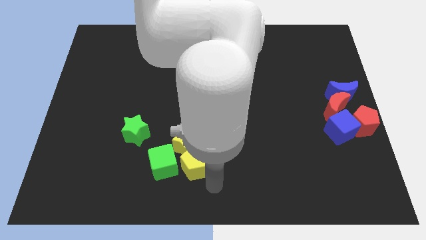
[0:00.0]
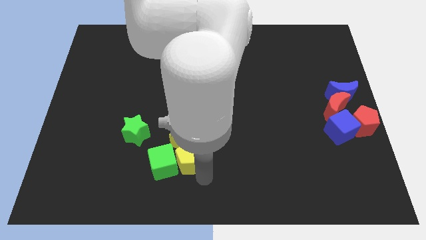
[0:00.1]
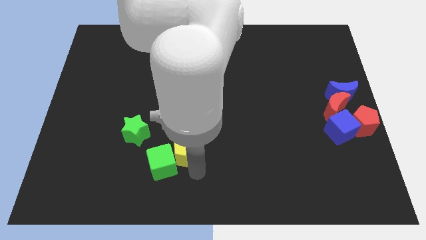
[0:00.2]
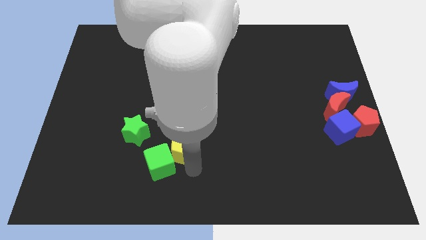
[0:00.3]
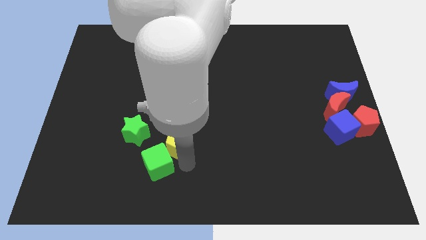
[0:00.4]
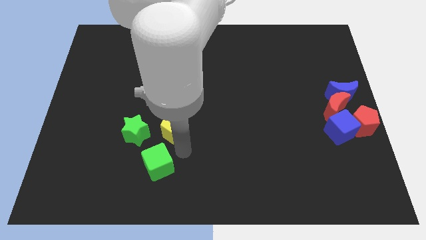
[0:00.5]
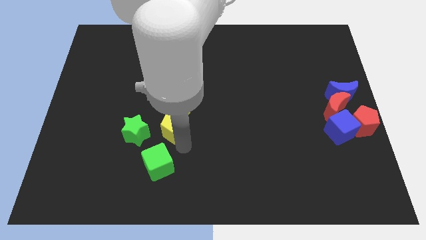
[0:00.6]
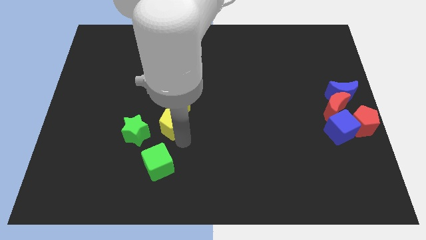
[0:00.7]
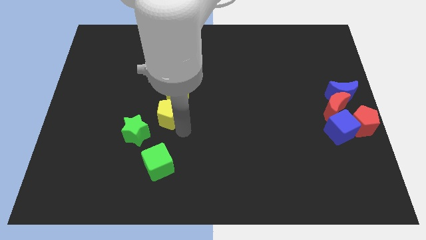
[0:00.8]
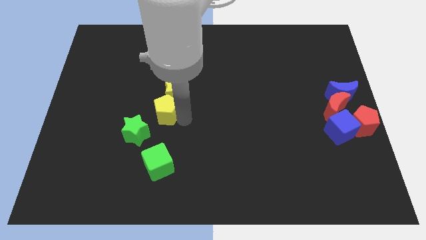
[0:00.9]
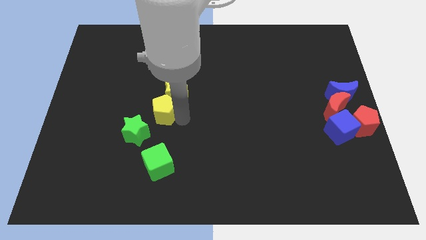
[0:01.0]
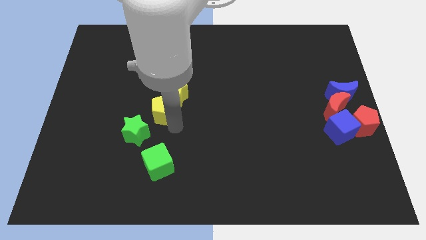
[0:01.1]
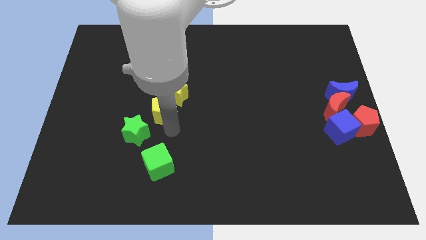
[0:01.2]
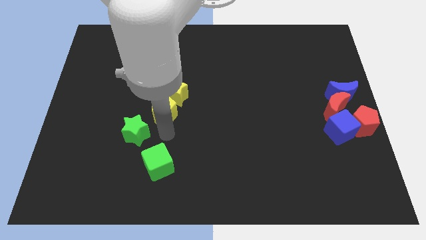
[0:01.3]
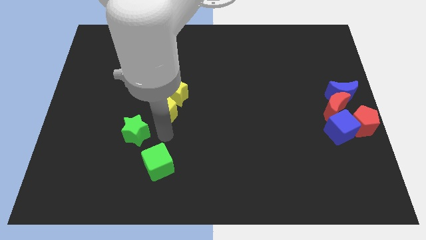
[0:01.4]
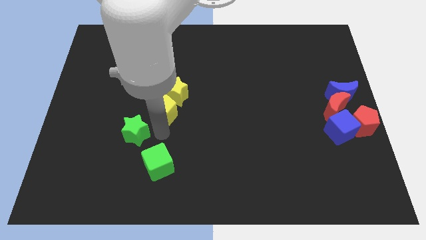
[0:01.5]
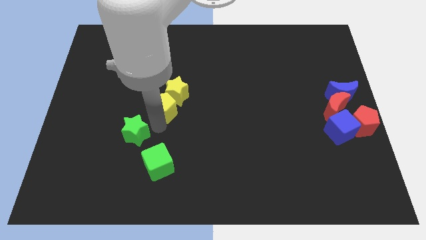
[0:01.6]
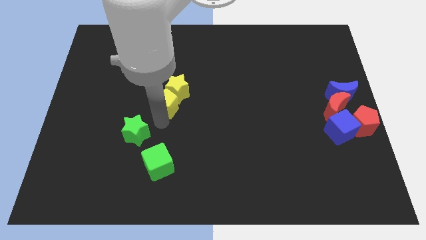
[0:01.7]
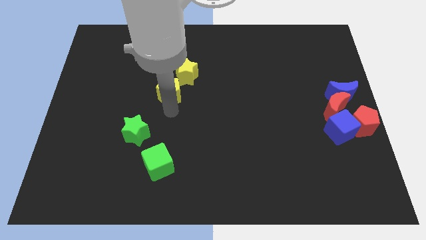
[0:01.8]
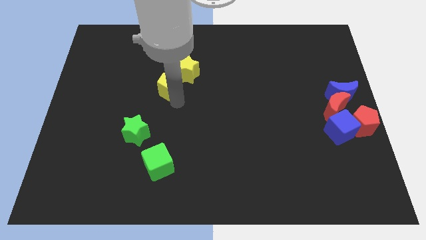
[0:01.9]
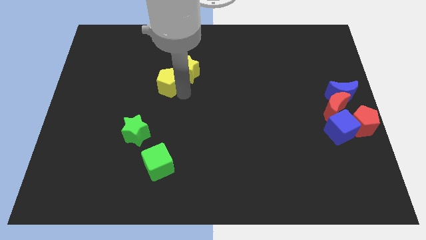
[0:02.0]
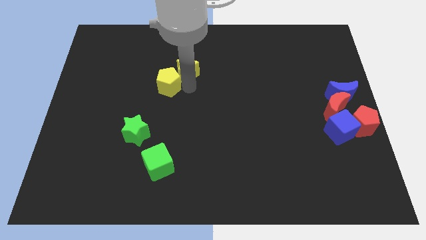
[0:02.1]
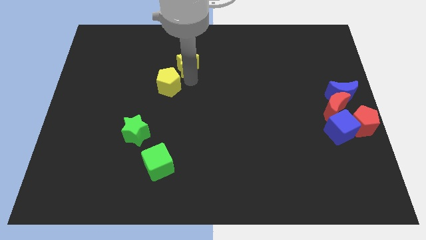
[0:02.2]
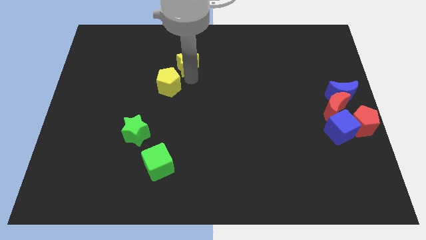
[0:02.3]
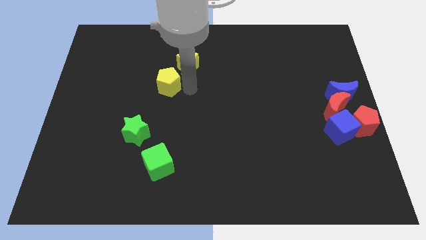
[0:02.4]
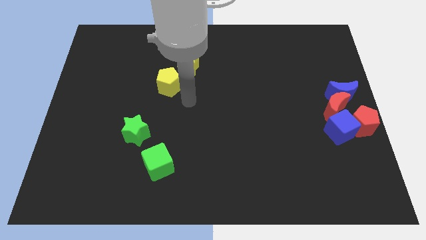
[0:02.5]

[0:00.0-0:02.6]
move the yellow blocks towards top

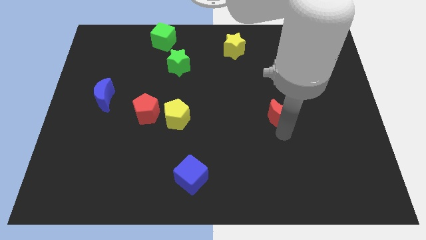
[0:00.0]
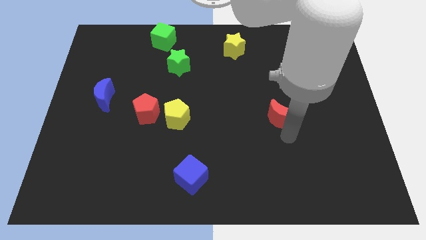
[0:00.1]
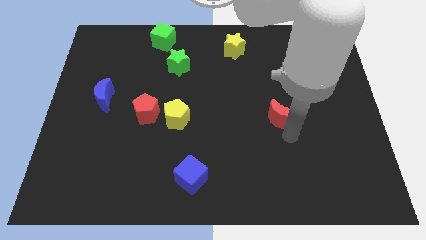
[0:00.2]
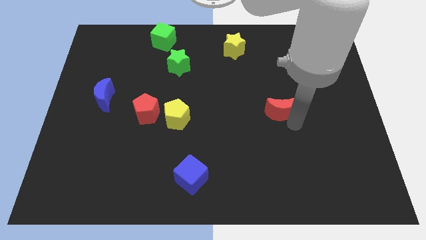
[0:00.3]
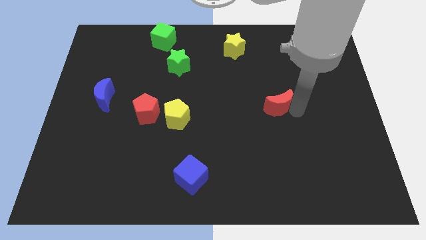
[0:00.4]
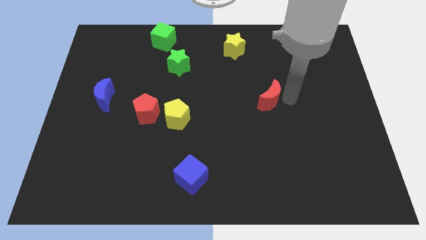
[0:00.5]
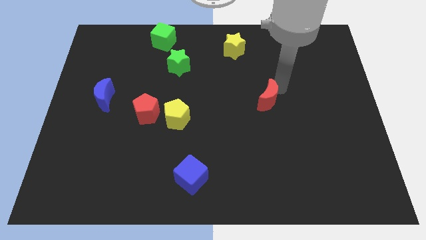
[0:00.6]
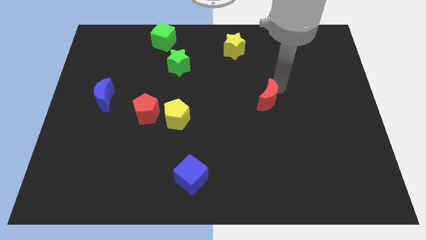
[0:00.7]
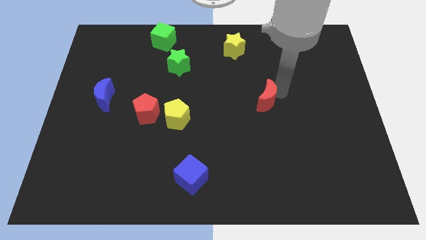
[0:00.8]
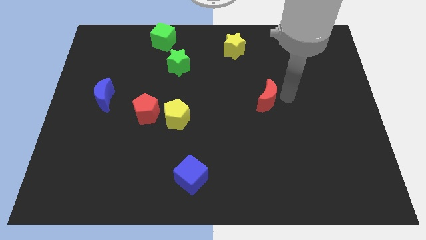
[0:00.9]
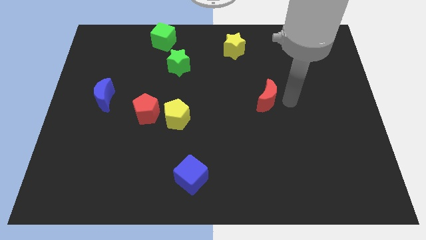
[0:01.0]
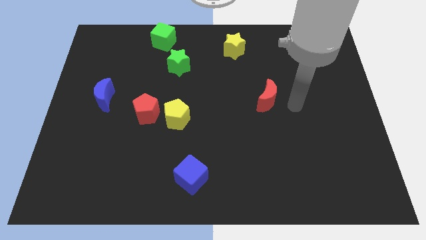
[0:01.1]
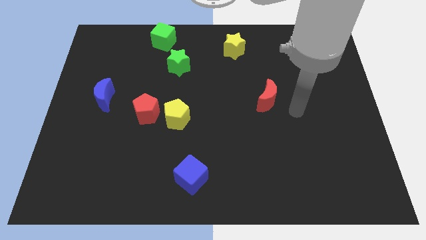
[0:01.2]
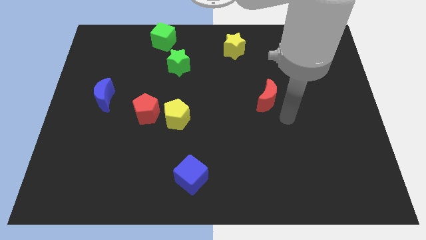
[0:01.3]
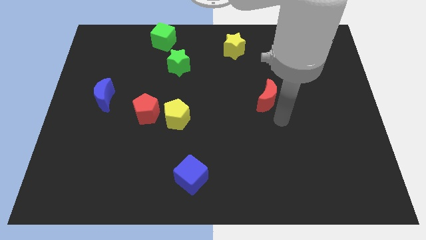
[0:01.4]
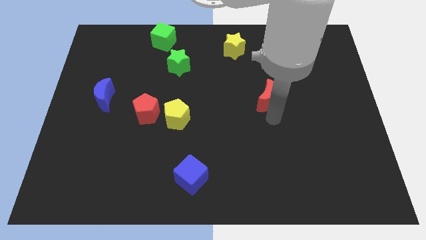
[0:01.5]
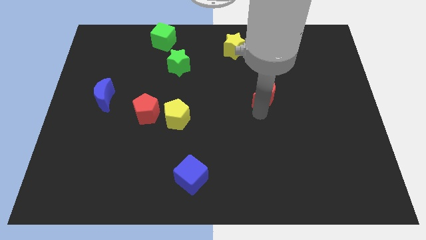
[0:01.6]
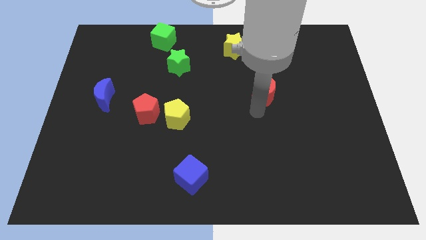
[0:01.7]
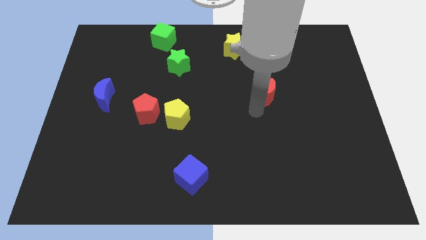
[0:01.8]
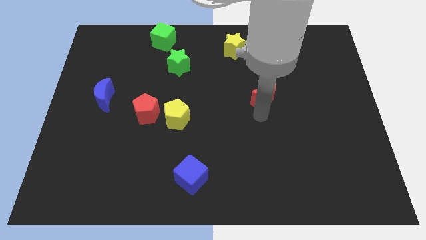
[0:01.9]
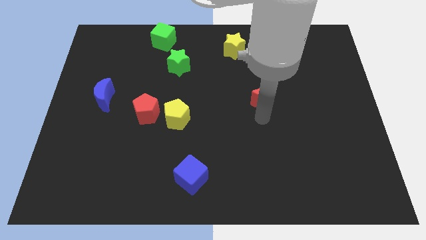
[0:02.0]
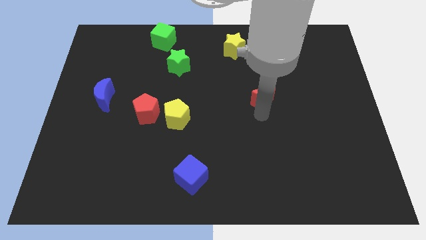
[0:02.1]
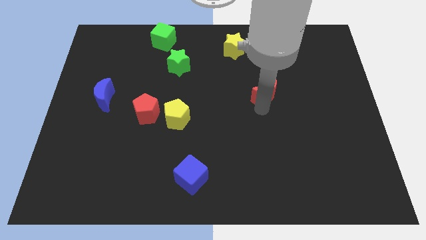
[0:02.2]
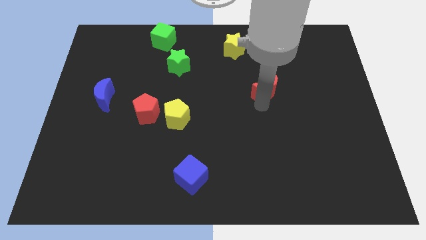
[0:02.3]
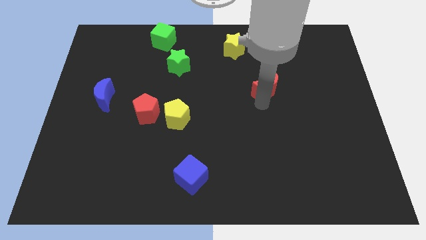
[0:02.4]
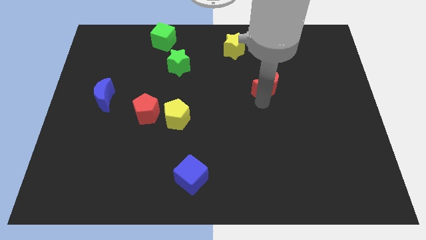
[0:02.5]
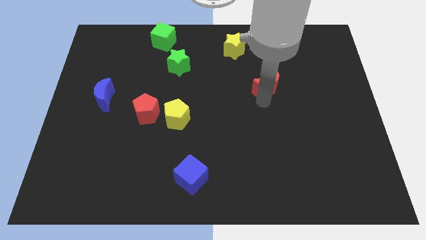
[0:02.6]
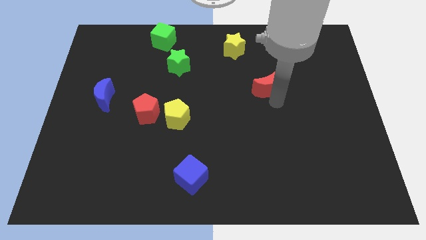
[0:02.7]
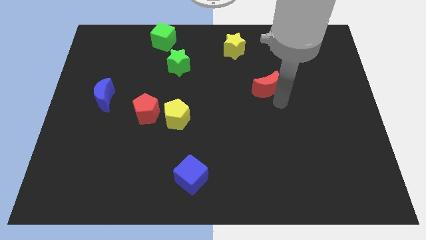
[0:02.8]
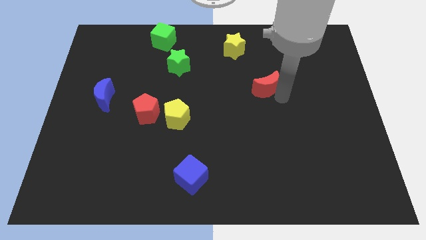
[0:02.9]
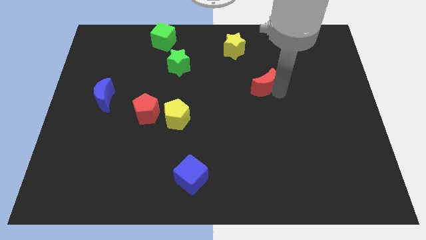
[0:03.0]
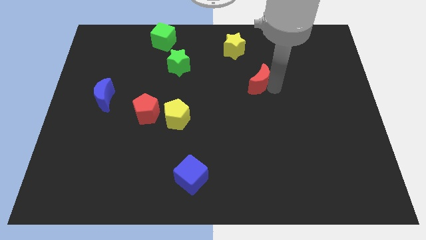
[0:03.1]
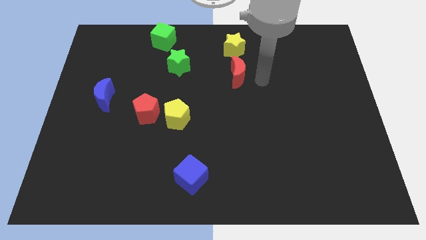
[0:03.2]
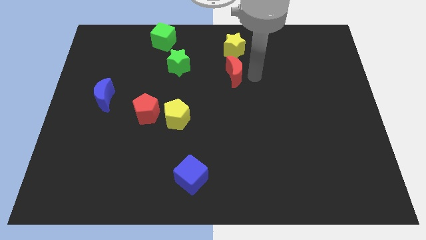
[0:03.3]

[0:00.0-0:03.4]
move the red crescent to the bottom side of the yellow star

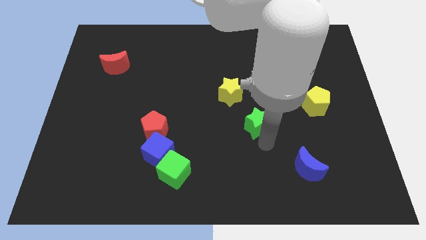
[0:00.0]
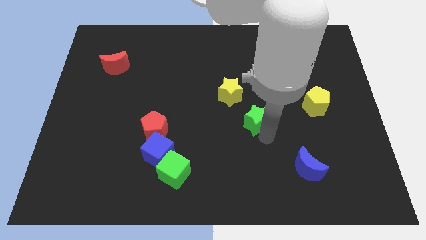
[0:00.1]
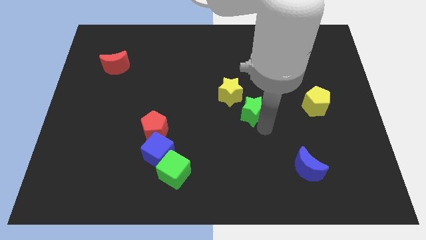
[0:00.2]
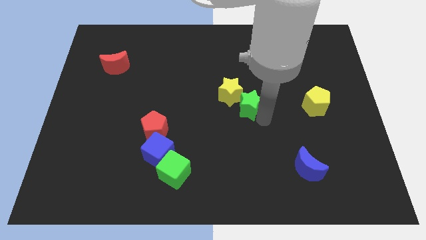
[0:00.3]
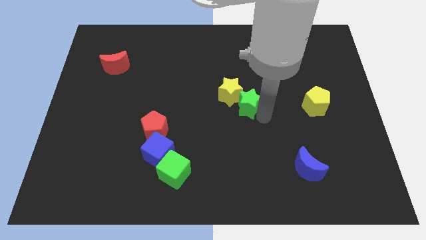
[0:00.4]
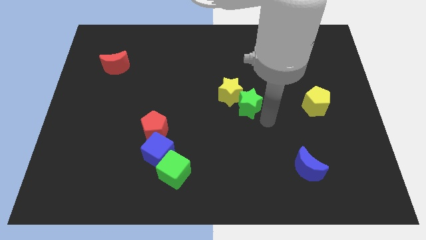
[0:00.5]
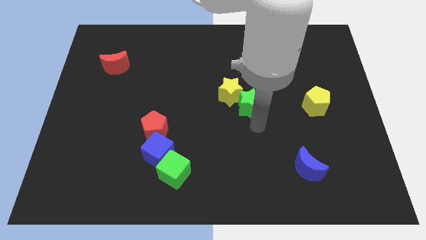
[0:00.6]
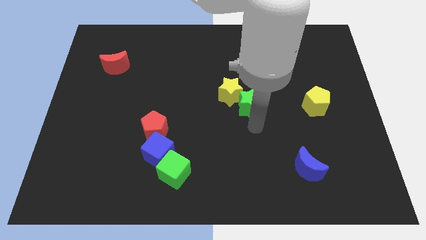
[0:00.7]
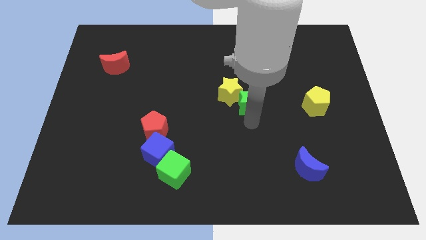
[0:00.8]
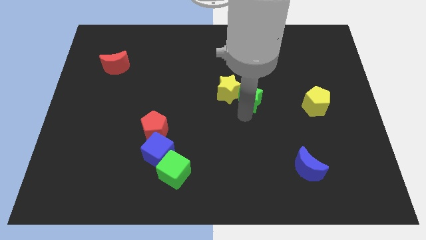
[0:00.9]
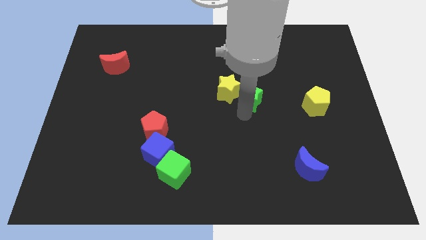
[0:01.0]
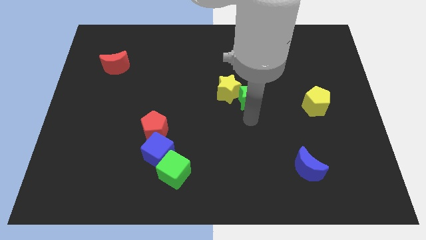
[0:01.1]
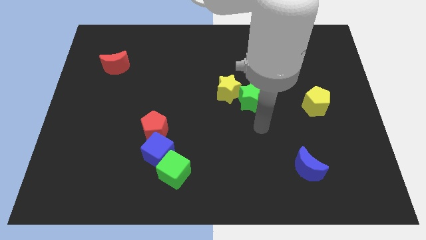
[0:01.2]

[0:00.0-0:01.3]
push green star into yellow star

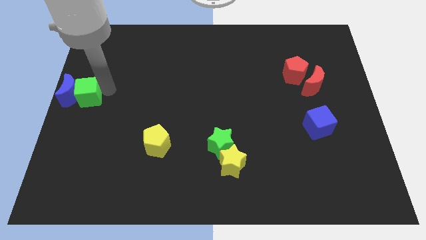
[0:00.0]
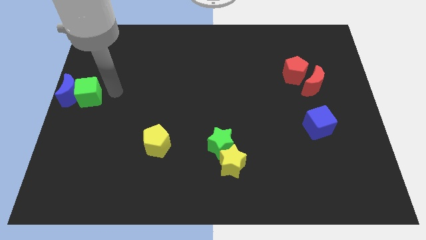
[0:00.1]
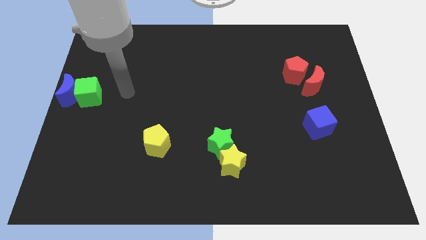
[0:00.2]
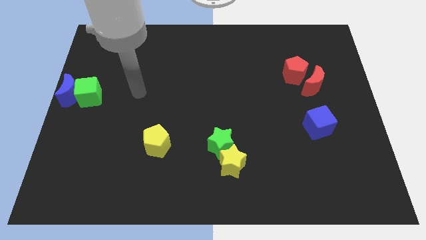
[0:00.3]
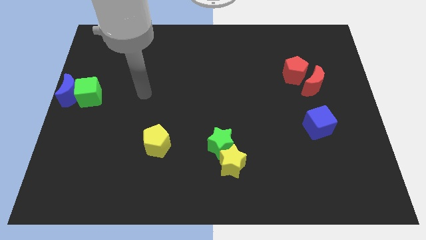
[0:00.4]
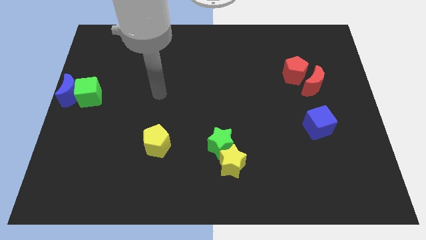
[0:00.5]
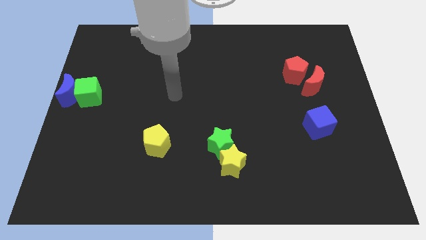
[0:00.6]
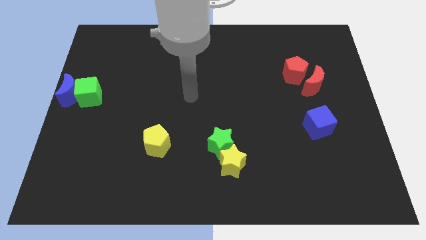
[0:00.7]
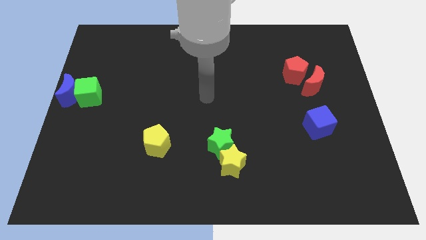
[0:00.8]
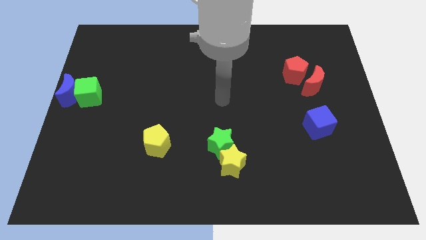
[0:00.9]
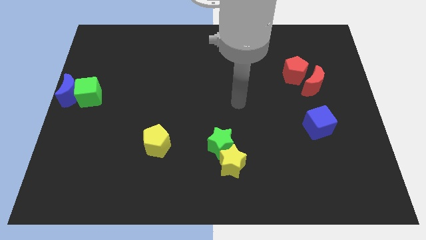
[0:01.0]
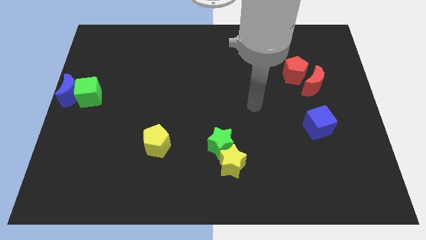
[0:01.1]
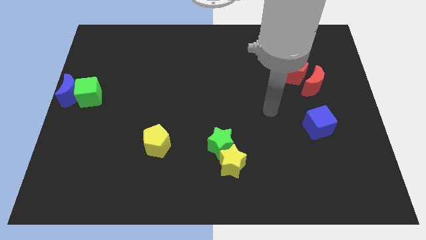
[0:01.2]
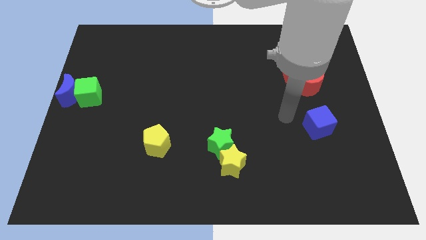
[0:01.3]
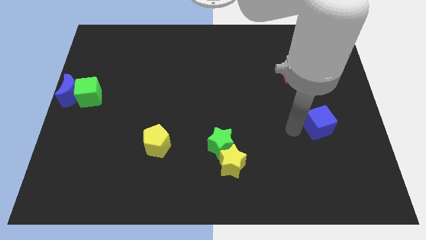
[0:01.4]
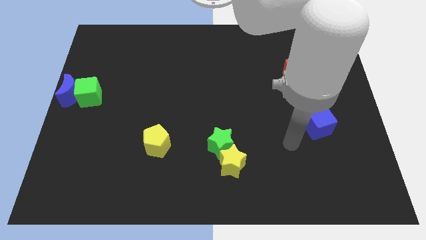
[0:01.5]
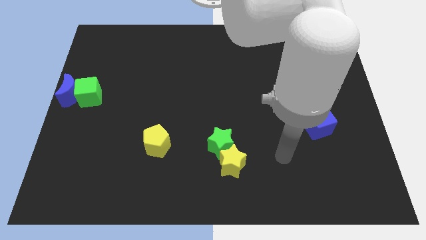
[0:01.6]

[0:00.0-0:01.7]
move your arm away from the green cube
